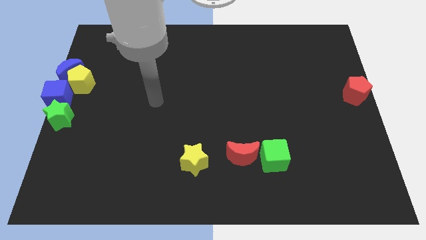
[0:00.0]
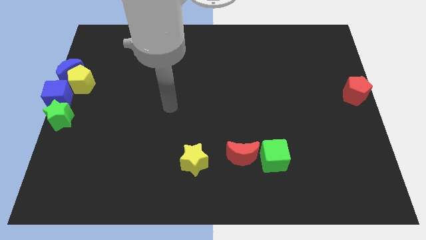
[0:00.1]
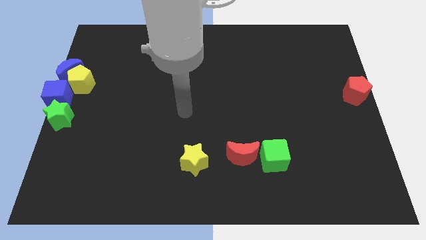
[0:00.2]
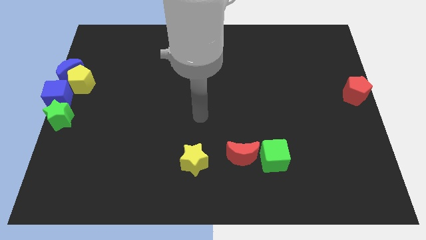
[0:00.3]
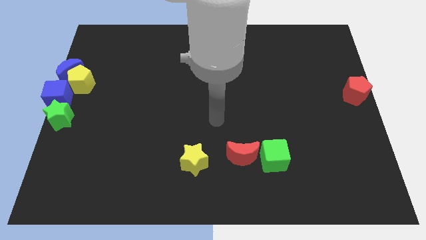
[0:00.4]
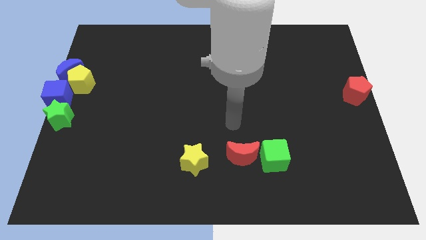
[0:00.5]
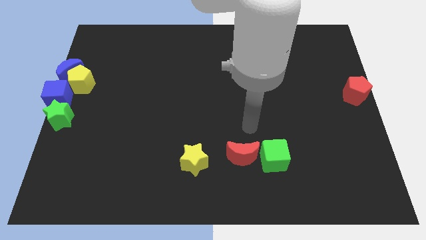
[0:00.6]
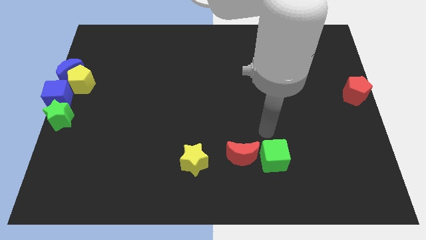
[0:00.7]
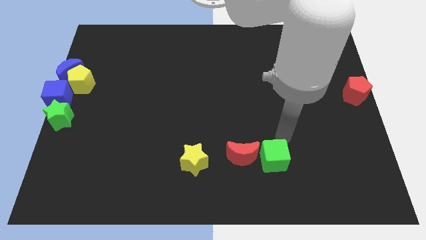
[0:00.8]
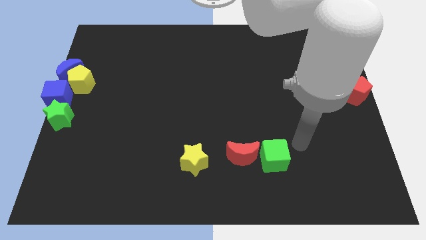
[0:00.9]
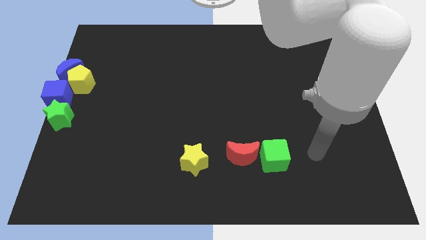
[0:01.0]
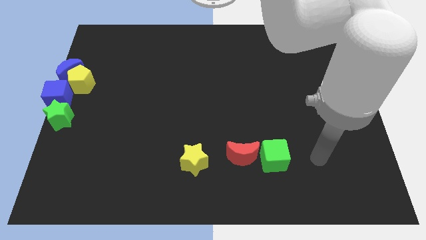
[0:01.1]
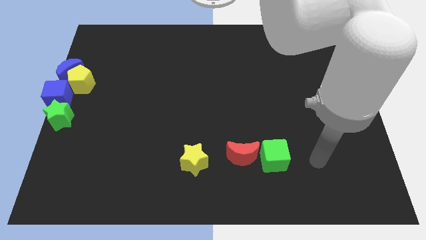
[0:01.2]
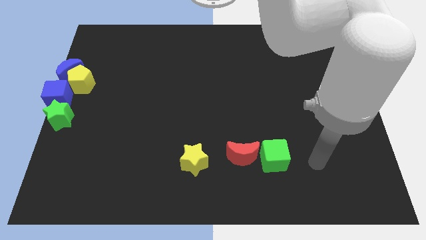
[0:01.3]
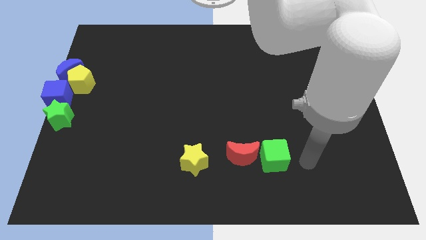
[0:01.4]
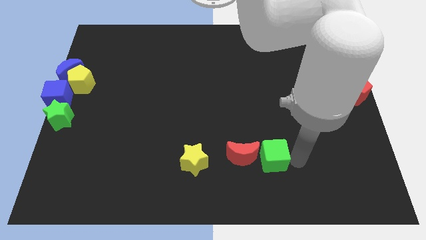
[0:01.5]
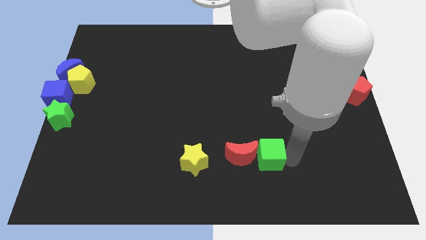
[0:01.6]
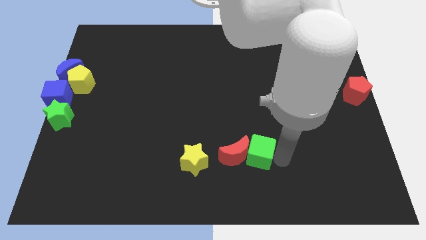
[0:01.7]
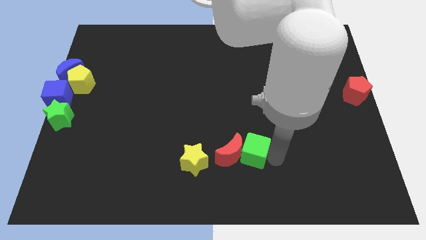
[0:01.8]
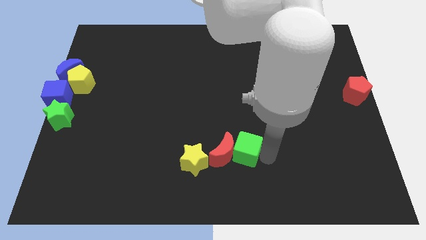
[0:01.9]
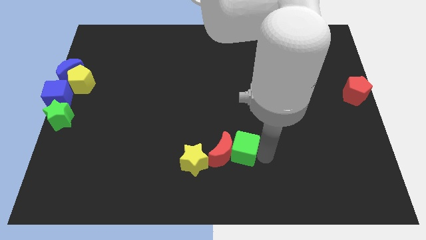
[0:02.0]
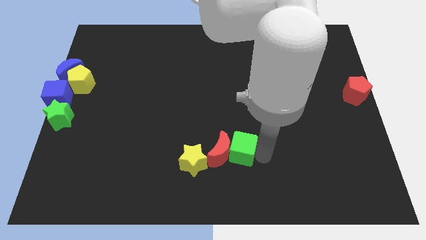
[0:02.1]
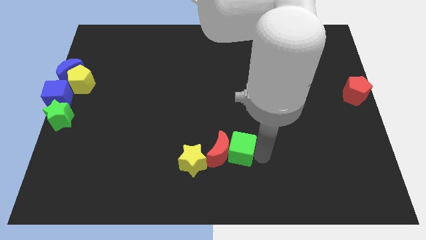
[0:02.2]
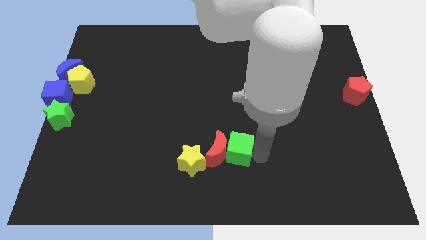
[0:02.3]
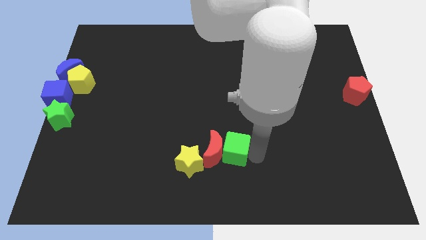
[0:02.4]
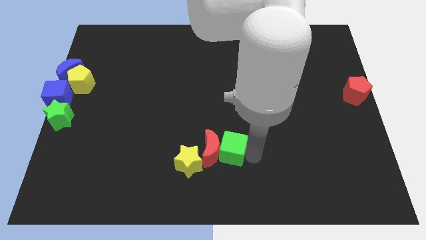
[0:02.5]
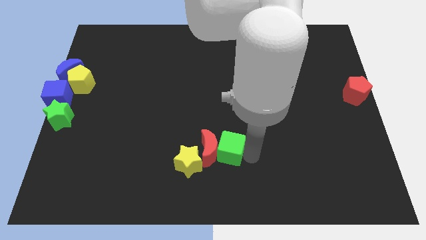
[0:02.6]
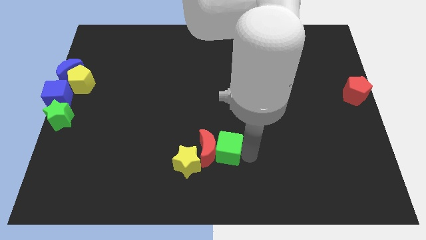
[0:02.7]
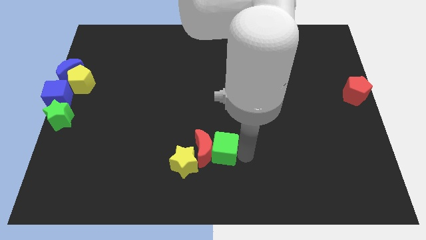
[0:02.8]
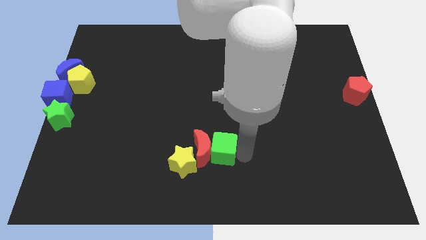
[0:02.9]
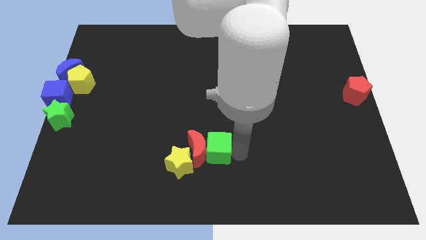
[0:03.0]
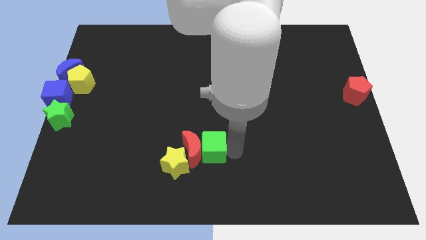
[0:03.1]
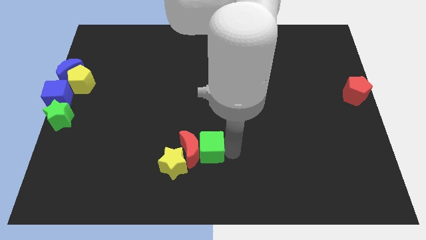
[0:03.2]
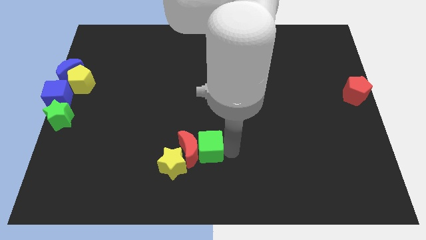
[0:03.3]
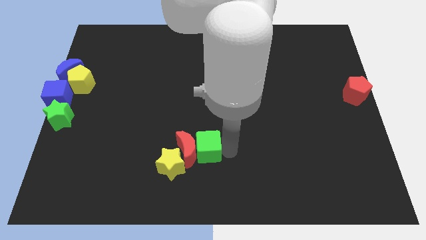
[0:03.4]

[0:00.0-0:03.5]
push the green cube along with the red moon into the yellow star

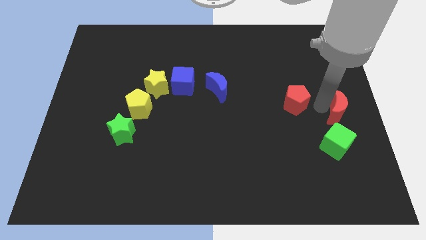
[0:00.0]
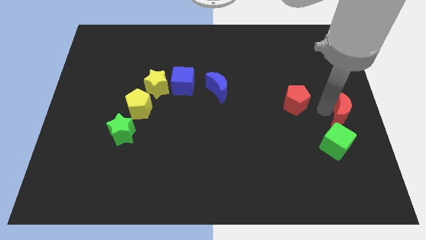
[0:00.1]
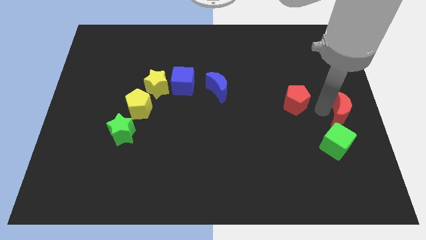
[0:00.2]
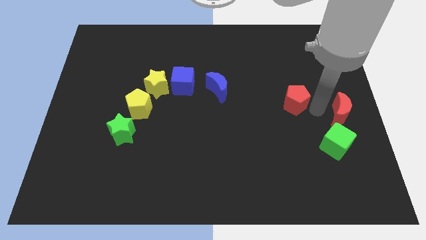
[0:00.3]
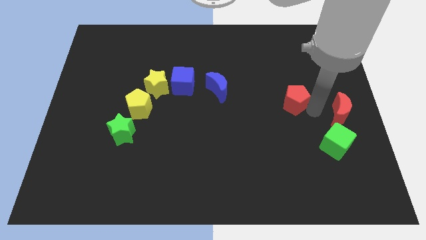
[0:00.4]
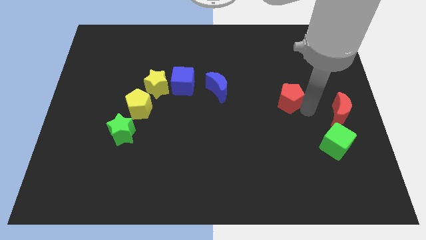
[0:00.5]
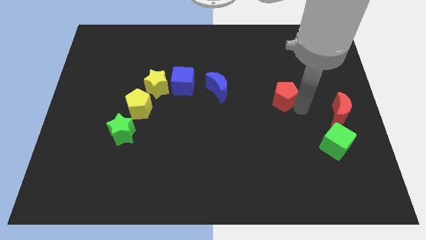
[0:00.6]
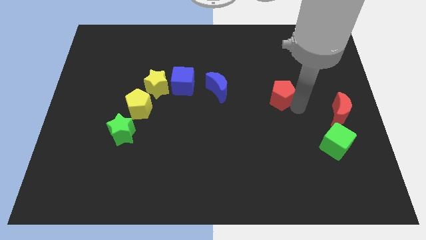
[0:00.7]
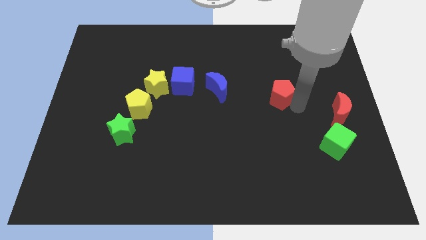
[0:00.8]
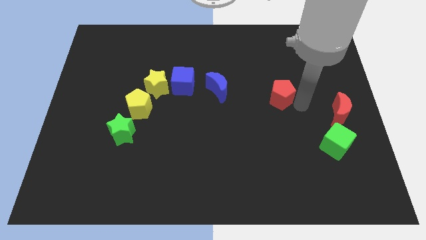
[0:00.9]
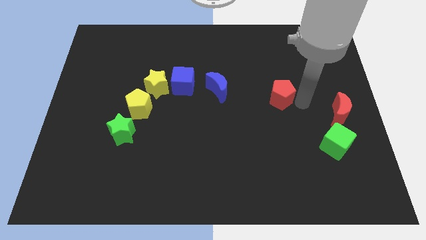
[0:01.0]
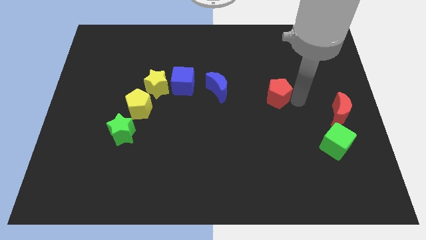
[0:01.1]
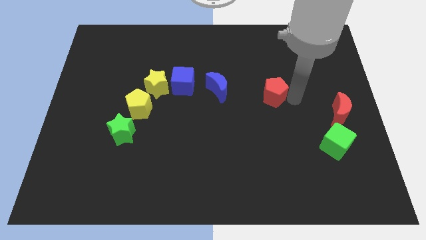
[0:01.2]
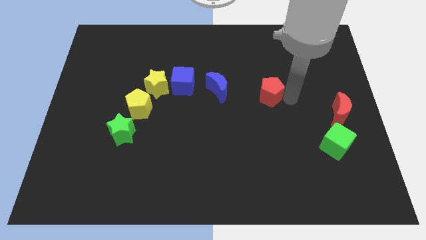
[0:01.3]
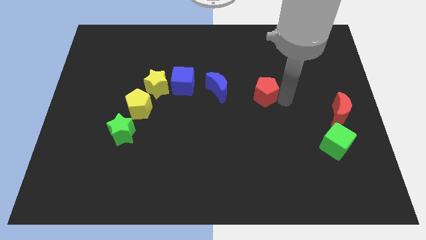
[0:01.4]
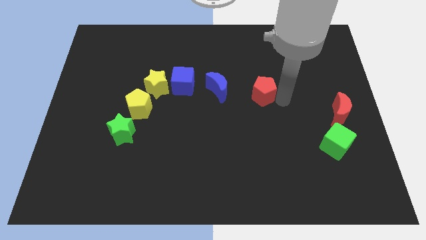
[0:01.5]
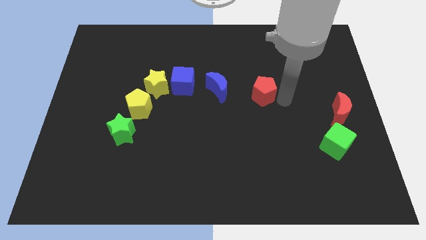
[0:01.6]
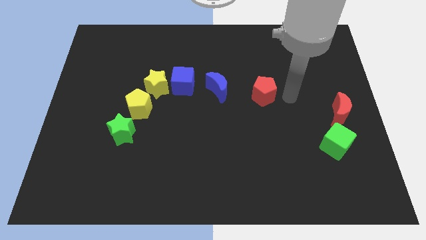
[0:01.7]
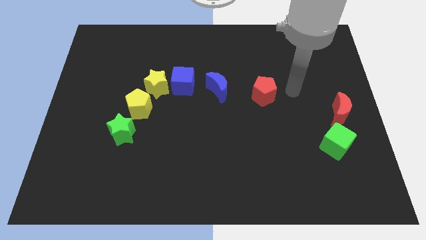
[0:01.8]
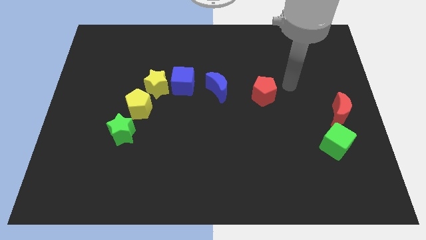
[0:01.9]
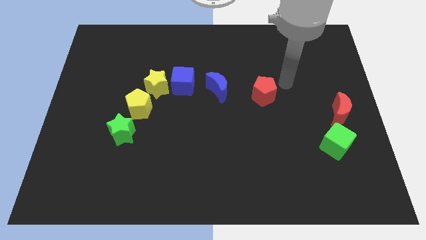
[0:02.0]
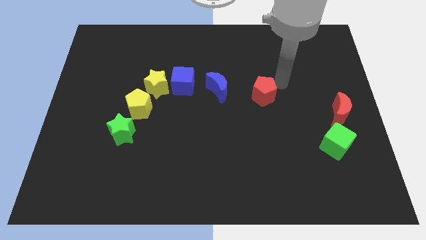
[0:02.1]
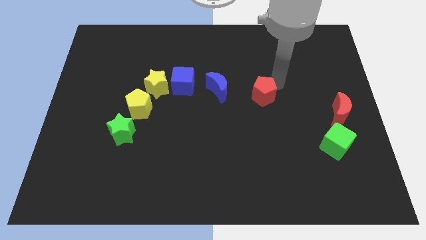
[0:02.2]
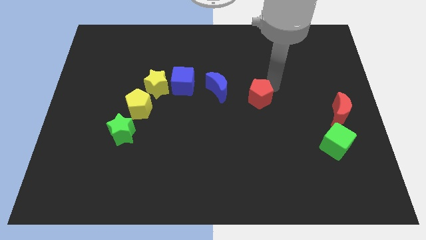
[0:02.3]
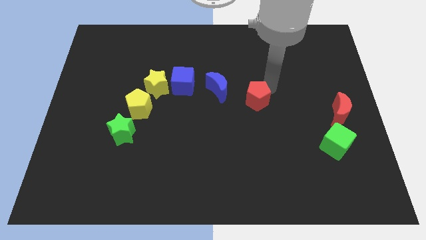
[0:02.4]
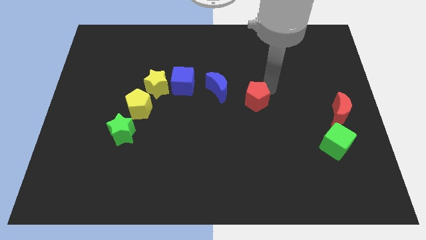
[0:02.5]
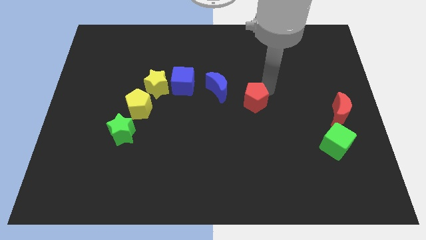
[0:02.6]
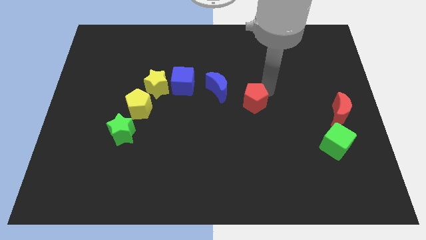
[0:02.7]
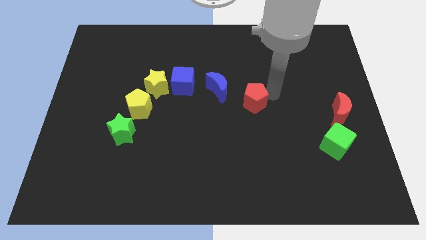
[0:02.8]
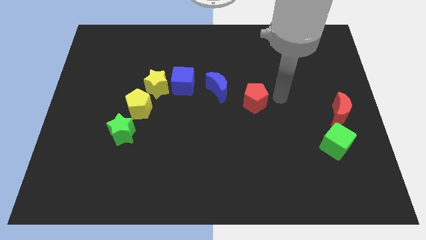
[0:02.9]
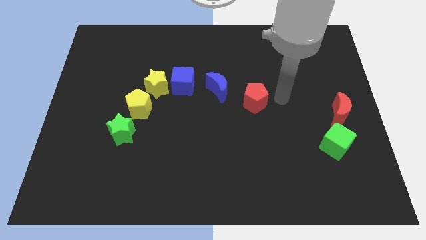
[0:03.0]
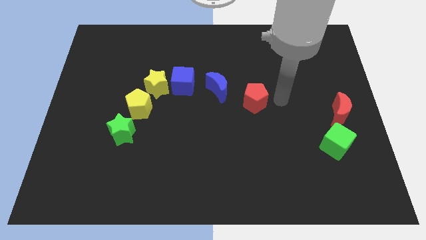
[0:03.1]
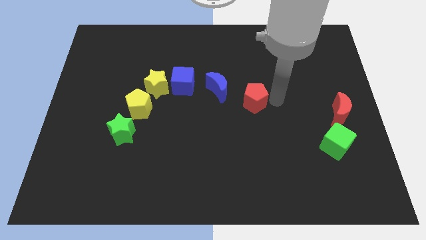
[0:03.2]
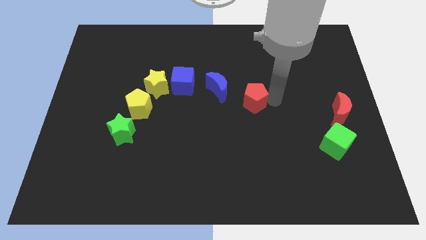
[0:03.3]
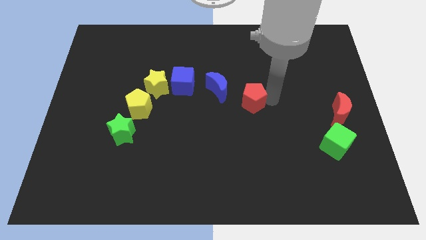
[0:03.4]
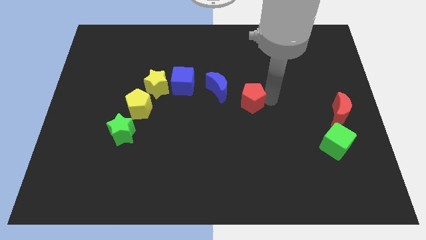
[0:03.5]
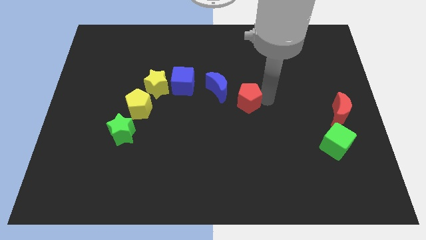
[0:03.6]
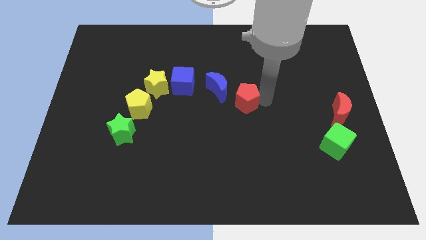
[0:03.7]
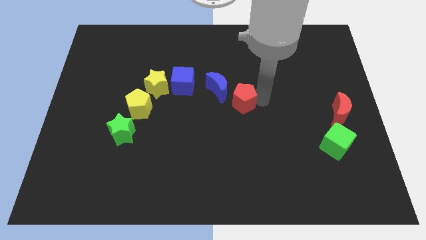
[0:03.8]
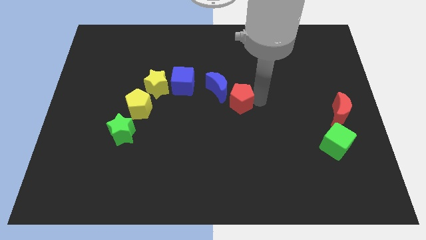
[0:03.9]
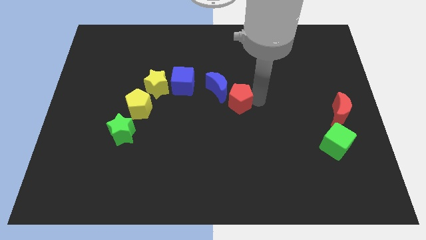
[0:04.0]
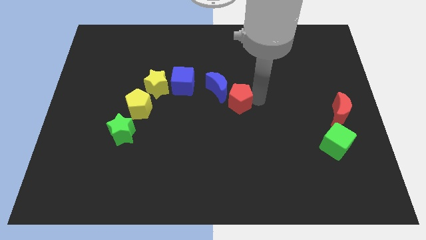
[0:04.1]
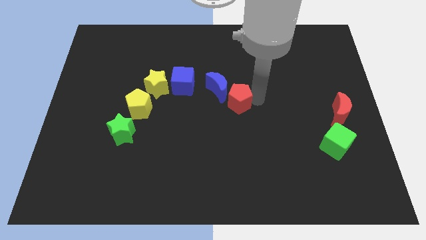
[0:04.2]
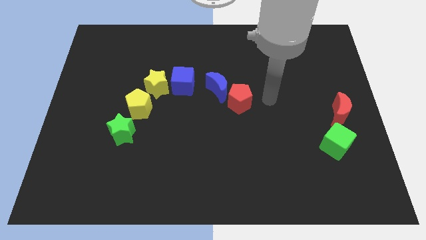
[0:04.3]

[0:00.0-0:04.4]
place the red pentagon to the right of the blue crescent

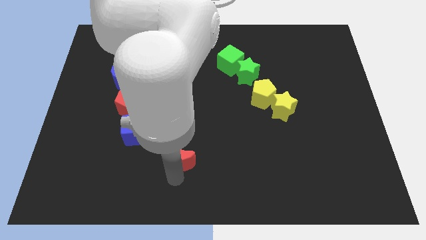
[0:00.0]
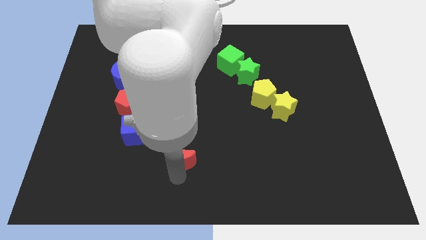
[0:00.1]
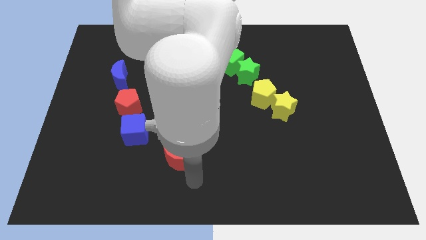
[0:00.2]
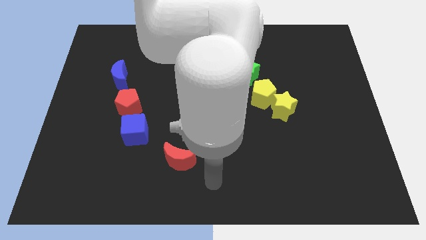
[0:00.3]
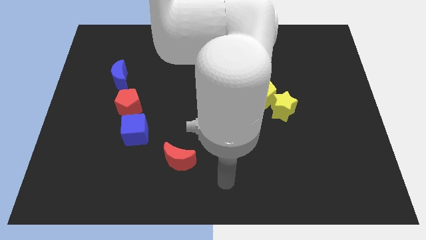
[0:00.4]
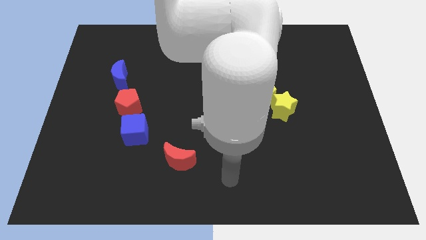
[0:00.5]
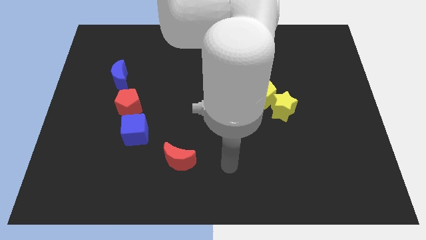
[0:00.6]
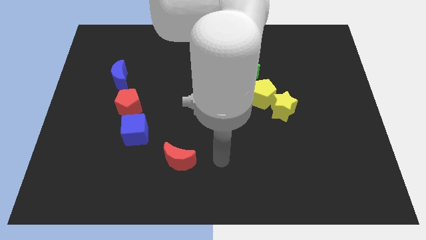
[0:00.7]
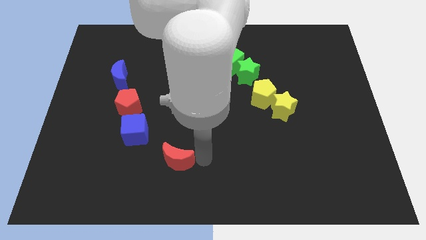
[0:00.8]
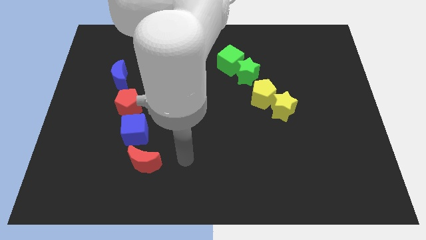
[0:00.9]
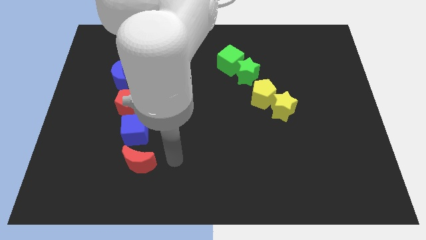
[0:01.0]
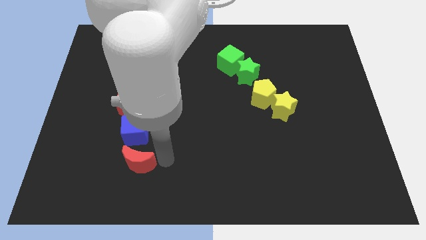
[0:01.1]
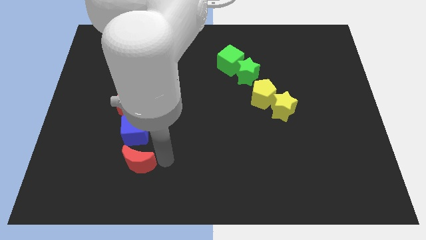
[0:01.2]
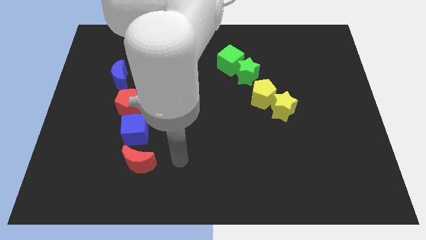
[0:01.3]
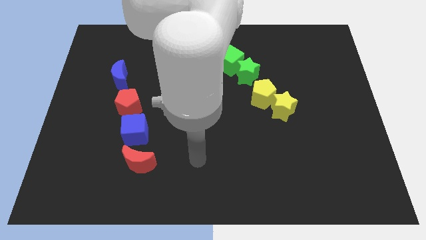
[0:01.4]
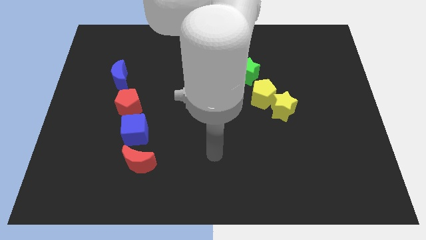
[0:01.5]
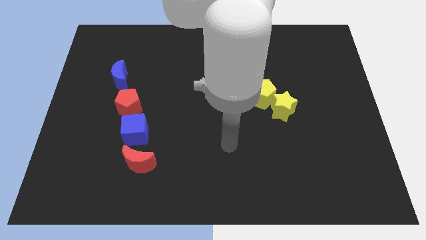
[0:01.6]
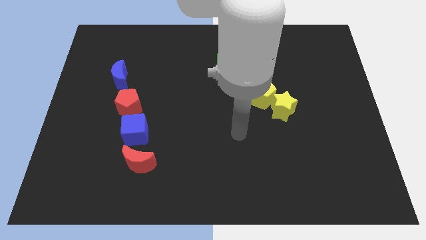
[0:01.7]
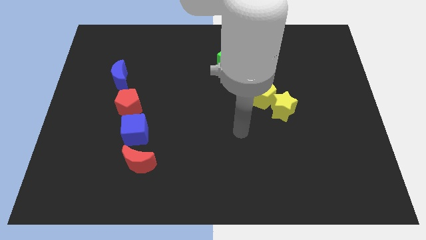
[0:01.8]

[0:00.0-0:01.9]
put the red crescent to the bottom side of the blue cube
